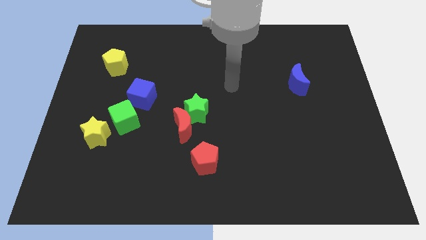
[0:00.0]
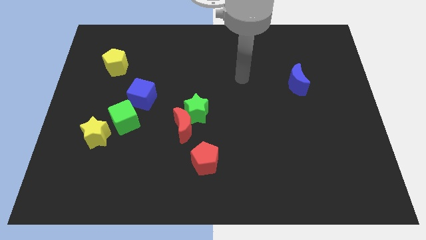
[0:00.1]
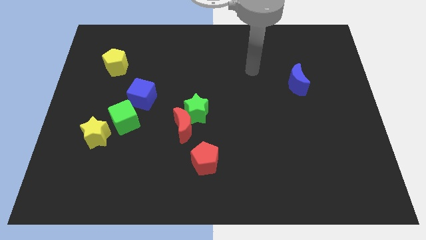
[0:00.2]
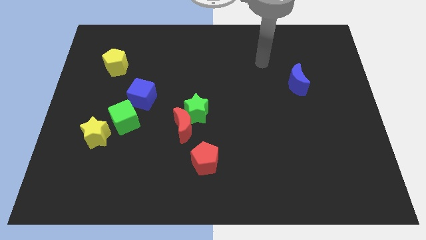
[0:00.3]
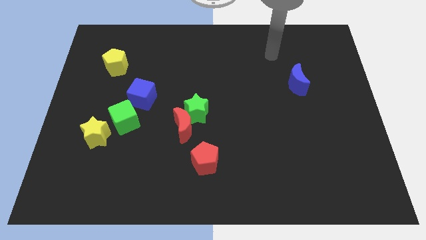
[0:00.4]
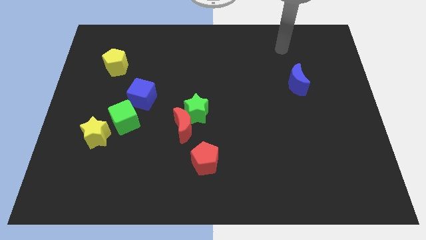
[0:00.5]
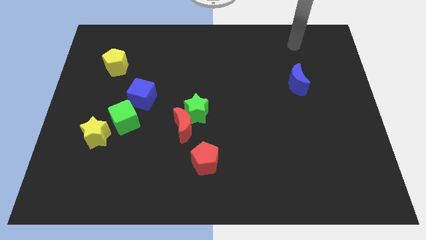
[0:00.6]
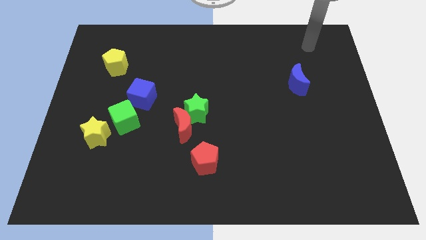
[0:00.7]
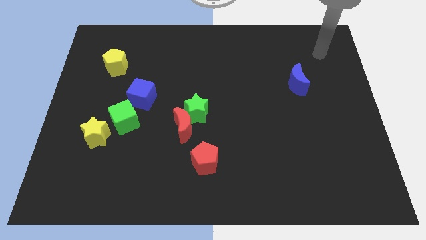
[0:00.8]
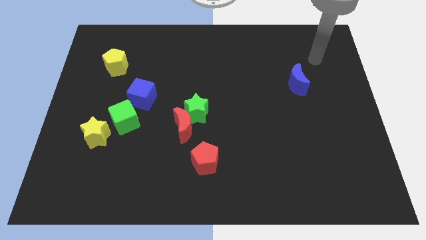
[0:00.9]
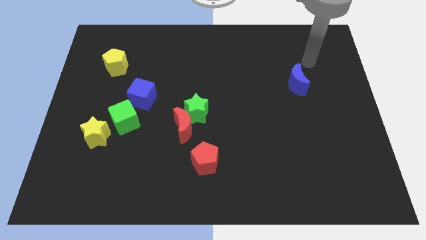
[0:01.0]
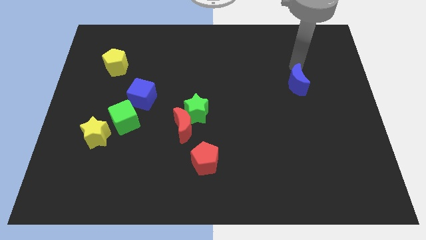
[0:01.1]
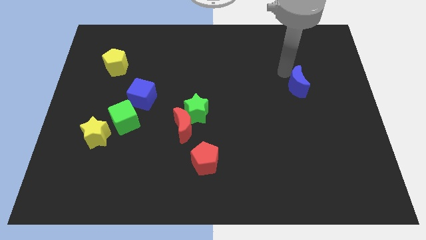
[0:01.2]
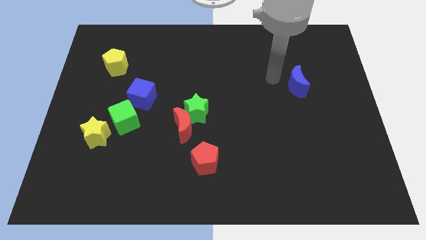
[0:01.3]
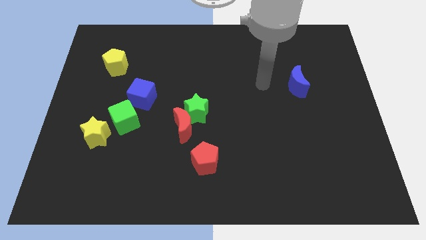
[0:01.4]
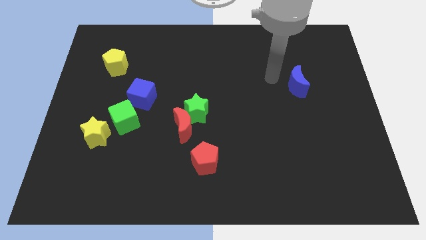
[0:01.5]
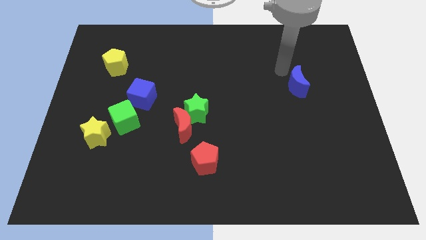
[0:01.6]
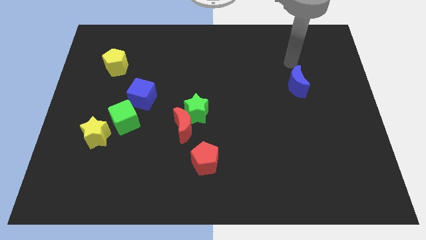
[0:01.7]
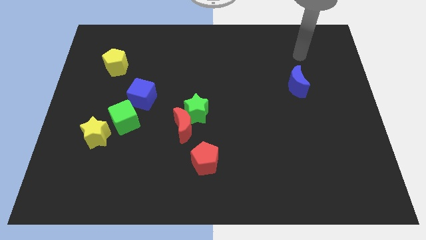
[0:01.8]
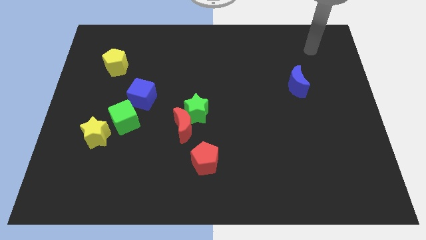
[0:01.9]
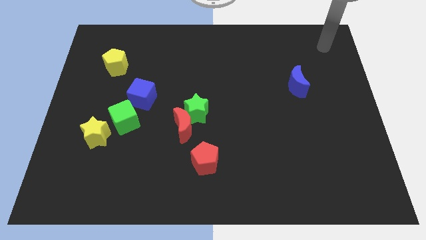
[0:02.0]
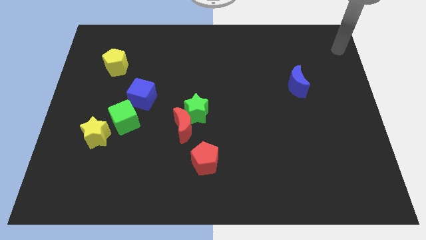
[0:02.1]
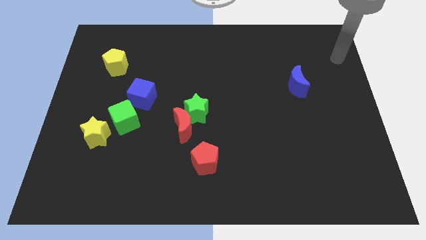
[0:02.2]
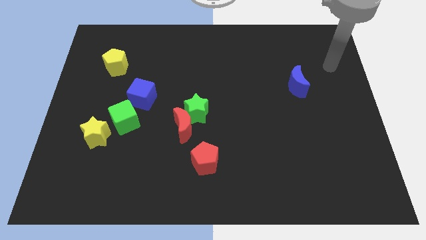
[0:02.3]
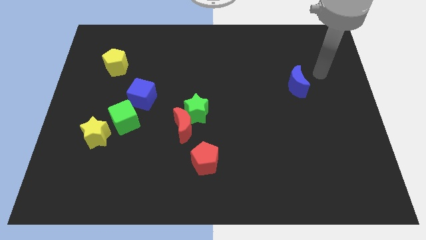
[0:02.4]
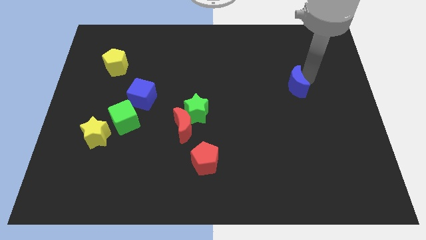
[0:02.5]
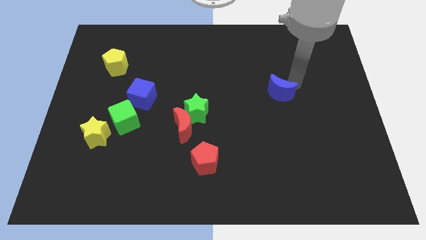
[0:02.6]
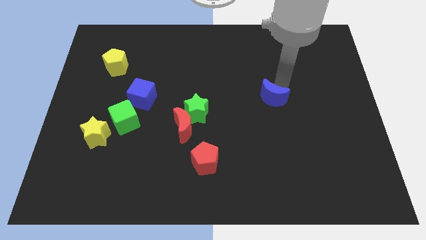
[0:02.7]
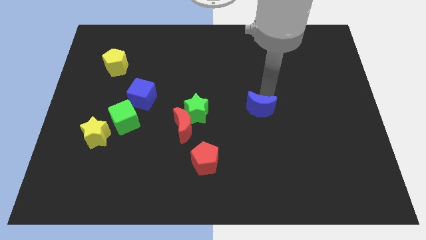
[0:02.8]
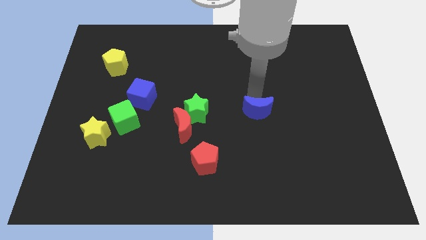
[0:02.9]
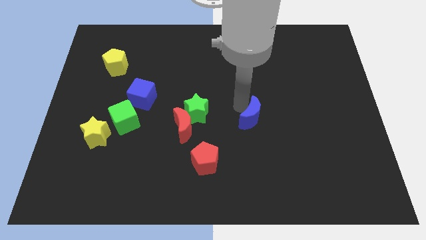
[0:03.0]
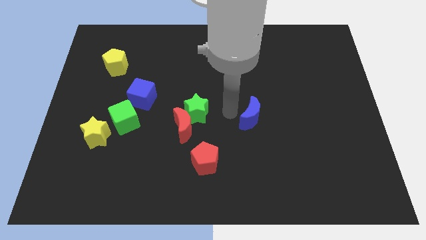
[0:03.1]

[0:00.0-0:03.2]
slide the blue crescent to the right side of the green star

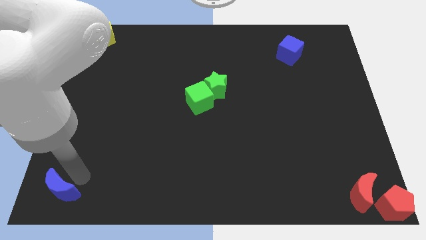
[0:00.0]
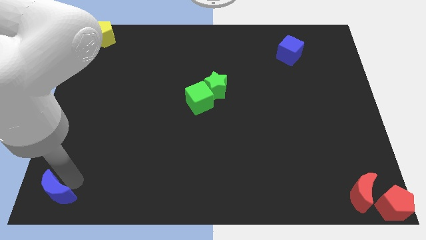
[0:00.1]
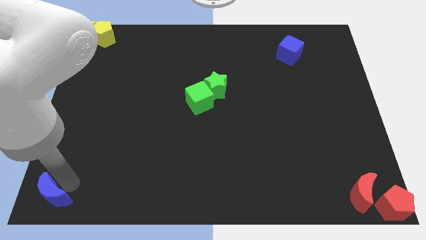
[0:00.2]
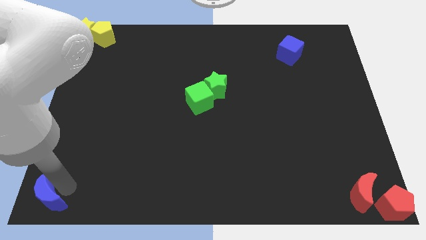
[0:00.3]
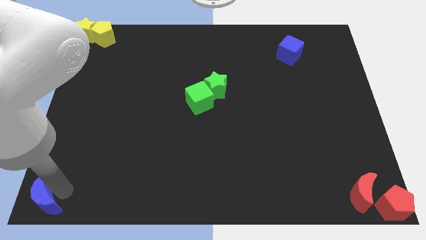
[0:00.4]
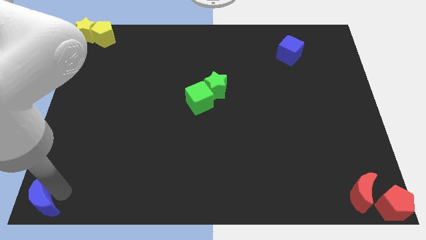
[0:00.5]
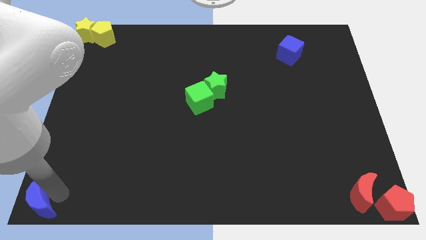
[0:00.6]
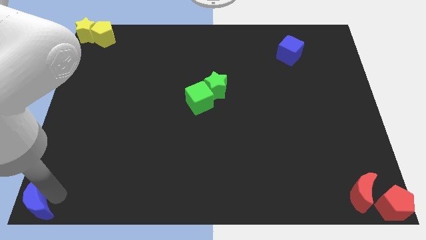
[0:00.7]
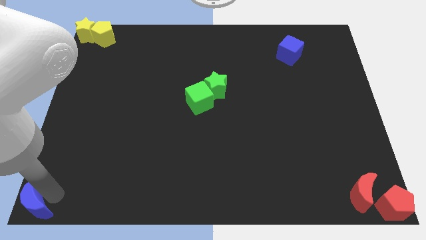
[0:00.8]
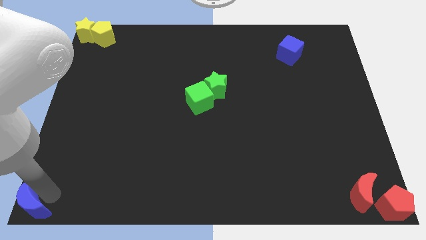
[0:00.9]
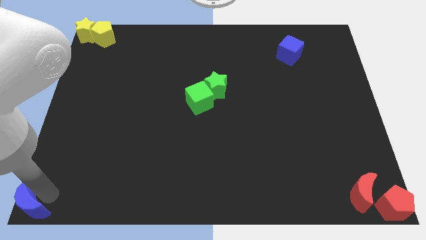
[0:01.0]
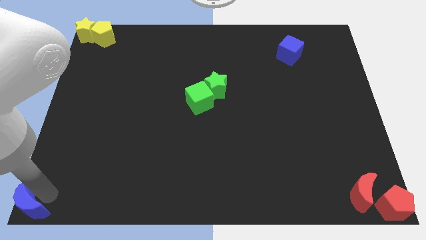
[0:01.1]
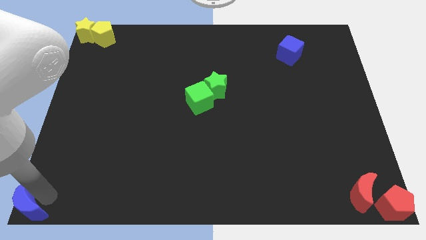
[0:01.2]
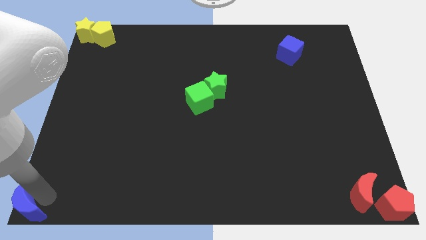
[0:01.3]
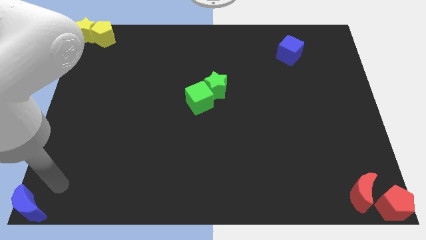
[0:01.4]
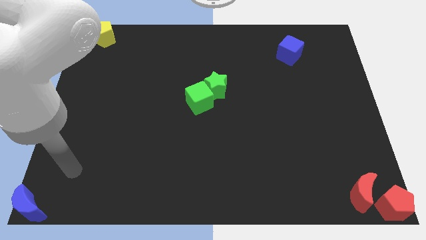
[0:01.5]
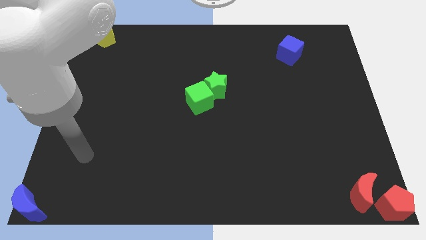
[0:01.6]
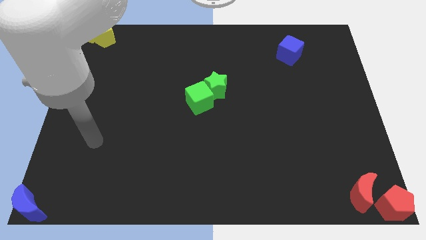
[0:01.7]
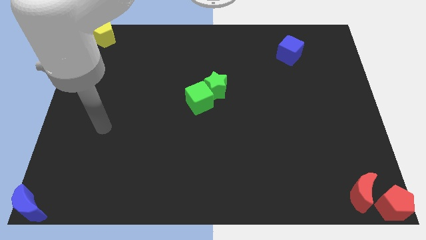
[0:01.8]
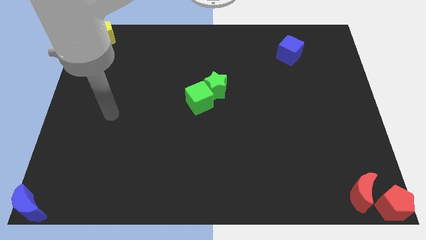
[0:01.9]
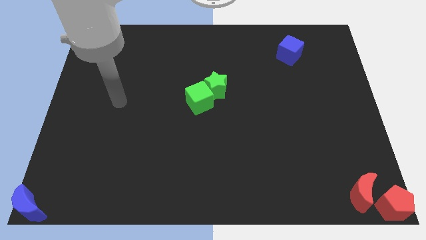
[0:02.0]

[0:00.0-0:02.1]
push the blue moon to the left bottom

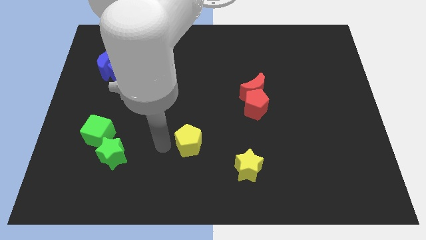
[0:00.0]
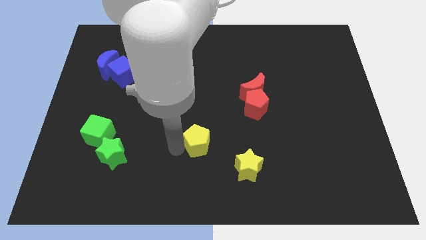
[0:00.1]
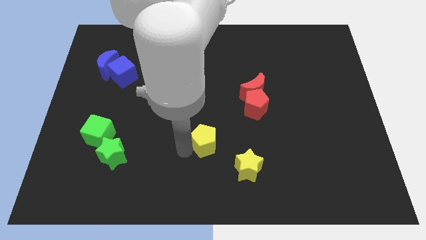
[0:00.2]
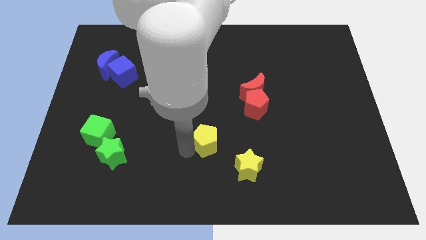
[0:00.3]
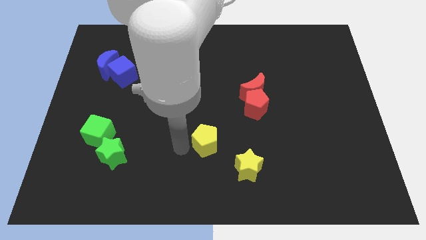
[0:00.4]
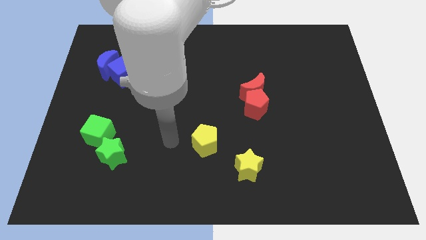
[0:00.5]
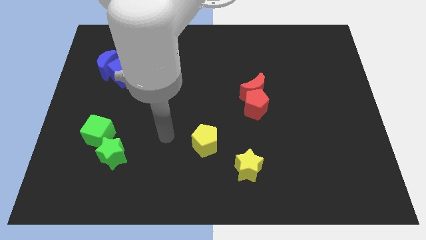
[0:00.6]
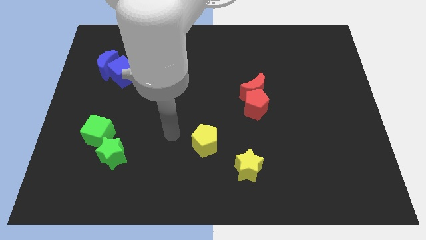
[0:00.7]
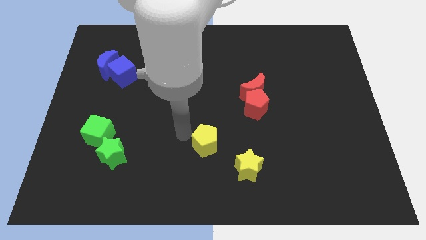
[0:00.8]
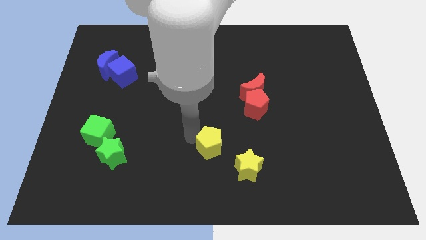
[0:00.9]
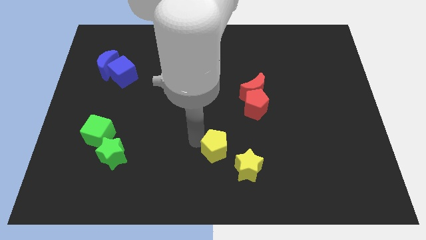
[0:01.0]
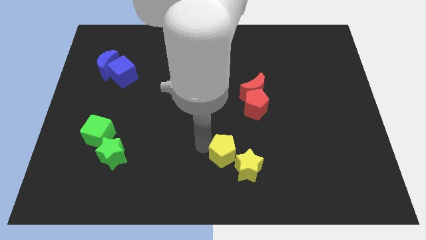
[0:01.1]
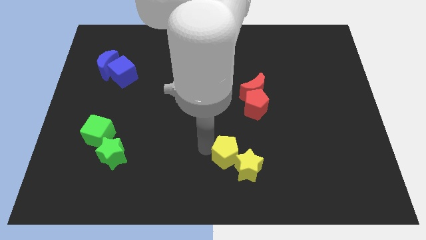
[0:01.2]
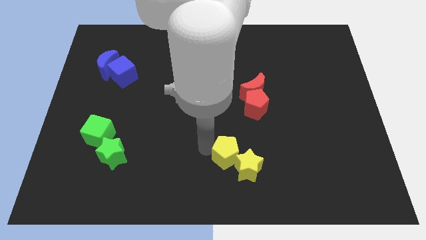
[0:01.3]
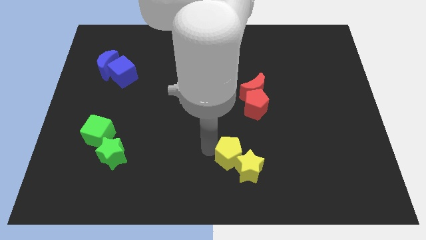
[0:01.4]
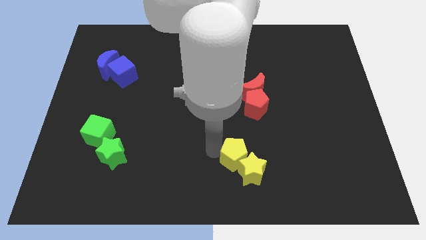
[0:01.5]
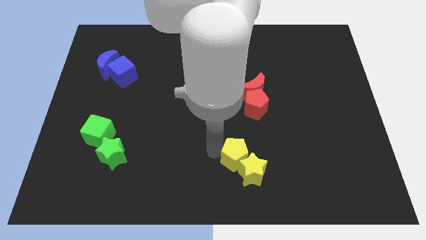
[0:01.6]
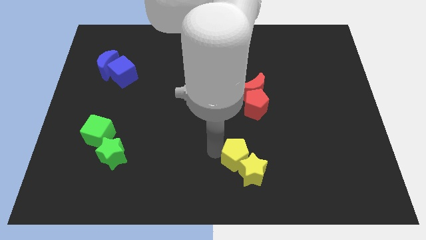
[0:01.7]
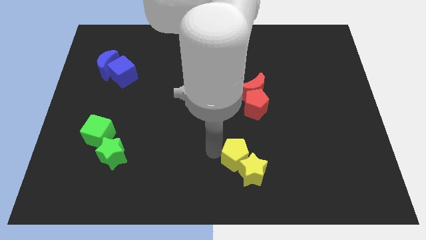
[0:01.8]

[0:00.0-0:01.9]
slightly push the yellow star with the yellow pentagon towards bottom right

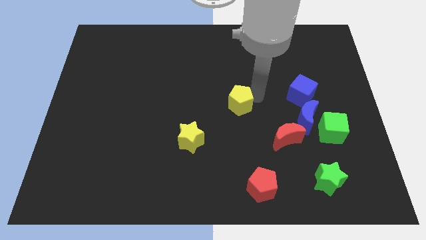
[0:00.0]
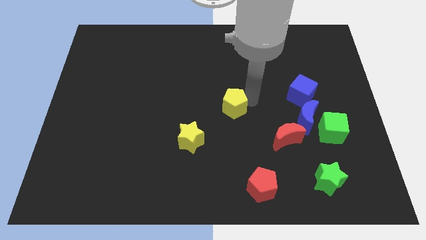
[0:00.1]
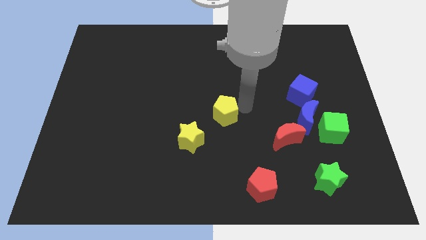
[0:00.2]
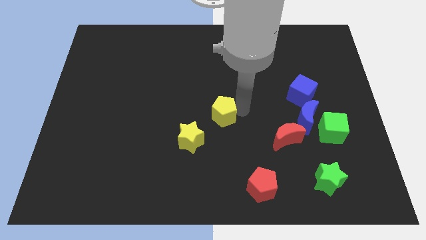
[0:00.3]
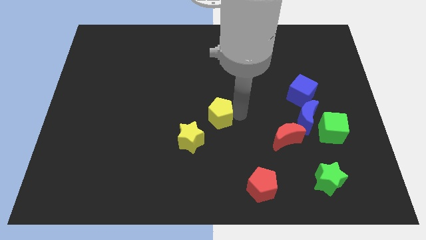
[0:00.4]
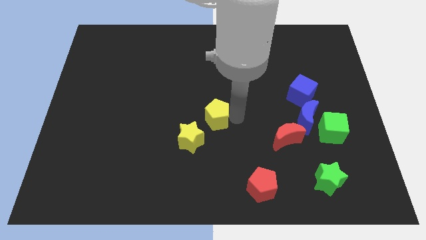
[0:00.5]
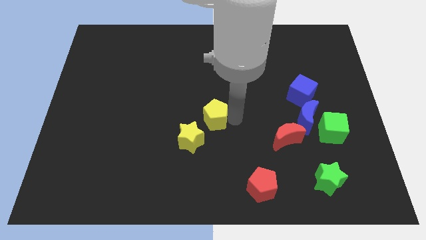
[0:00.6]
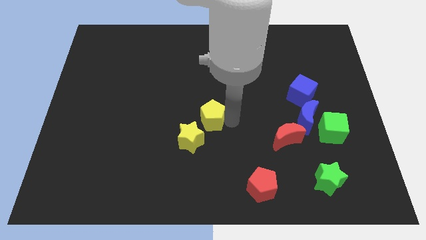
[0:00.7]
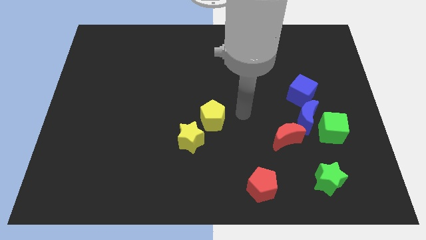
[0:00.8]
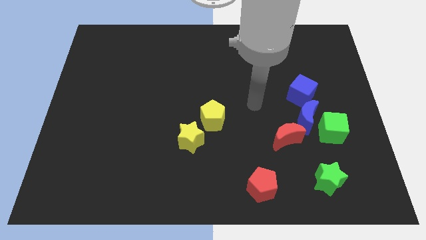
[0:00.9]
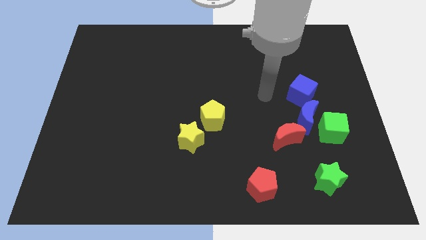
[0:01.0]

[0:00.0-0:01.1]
place the yellow pentagon above the yellow star

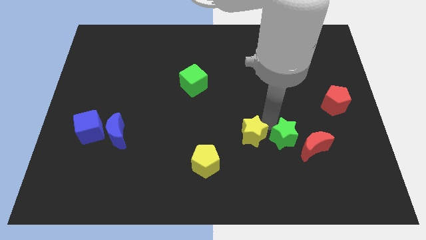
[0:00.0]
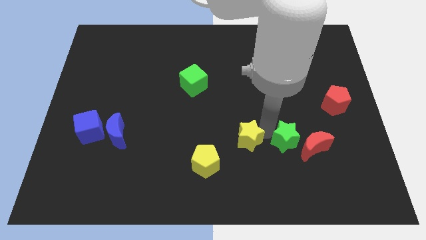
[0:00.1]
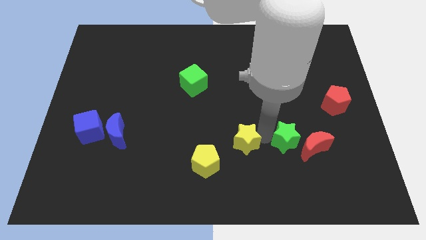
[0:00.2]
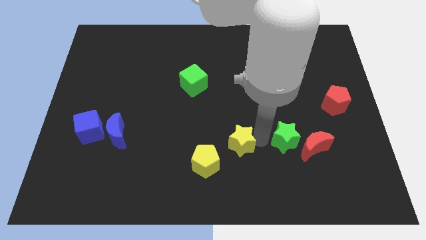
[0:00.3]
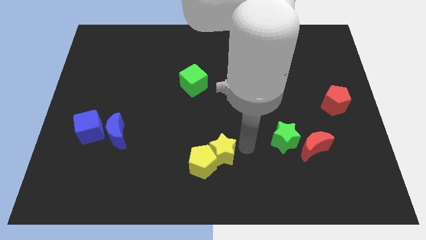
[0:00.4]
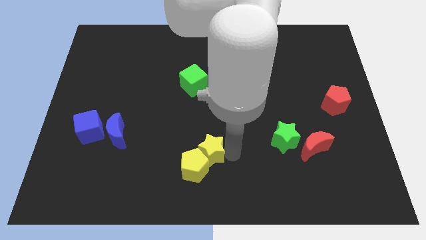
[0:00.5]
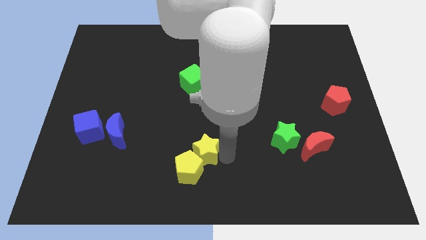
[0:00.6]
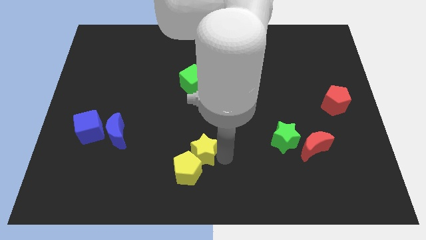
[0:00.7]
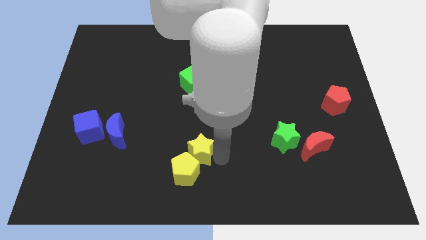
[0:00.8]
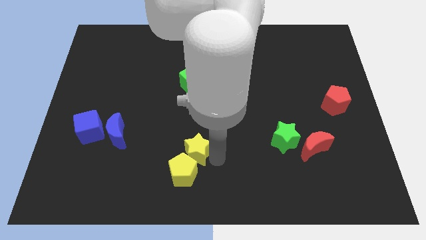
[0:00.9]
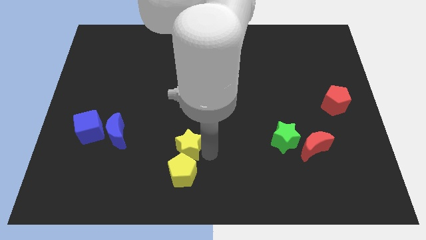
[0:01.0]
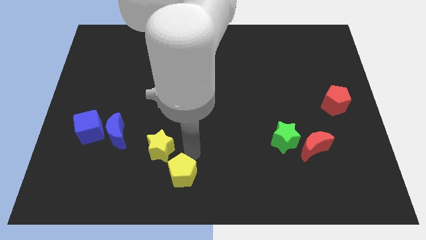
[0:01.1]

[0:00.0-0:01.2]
push the yellow star into the yellow pentagon
